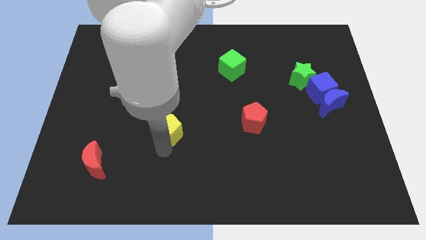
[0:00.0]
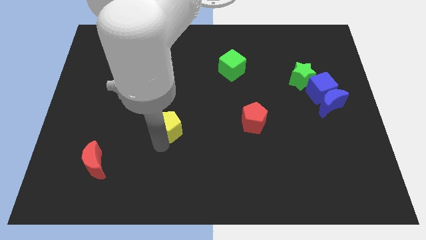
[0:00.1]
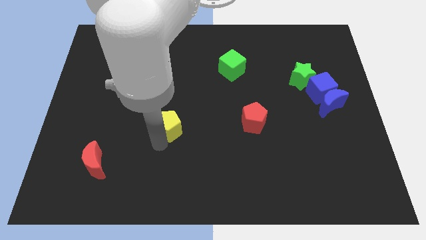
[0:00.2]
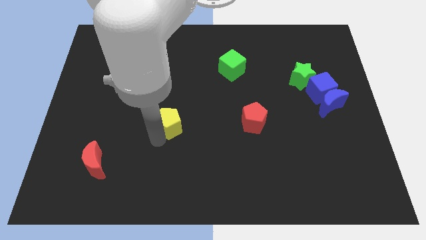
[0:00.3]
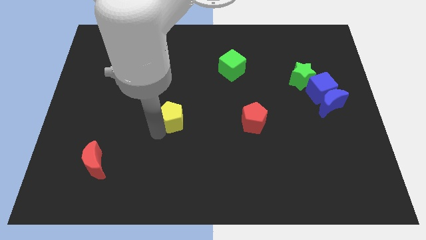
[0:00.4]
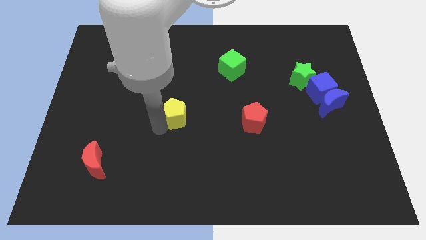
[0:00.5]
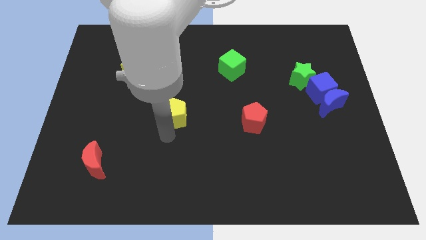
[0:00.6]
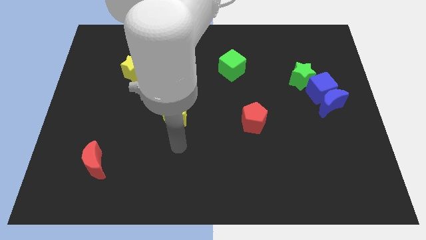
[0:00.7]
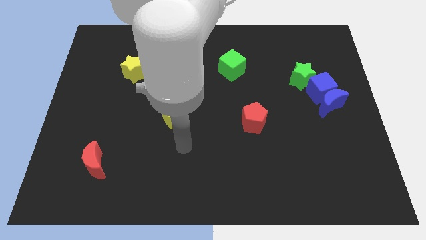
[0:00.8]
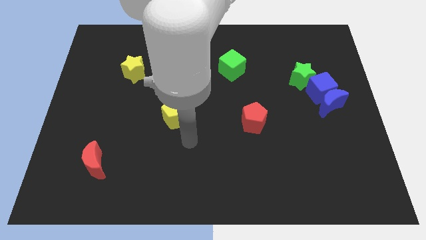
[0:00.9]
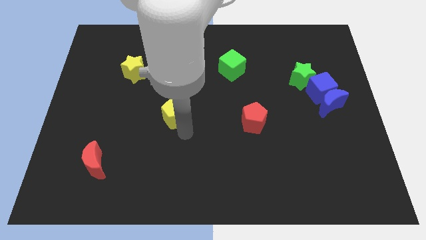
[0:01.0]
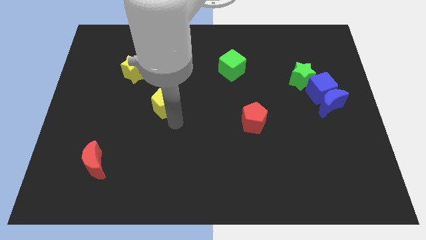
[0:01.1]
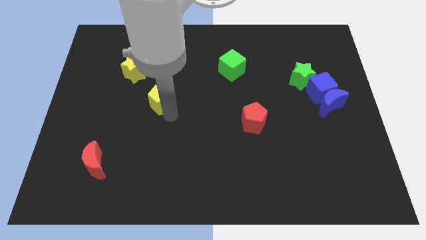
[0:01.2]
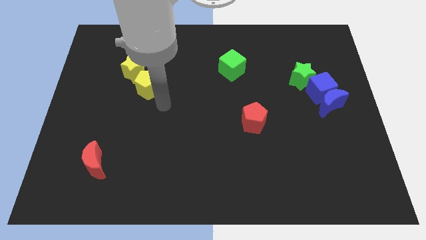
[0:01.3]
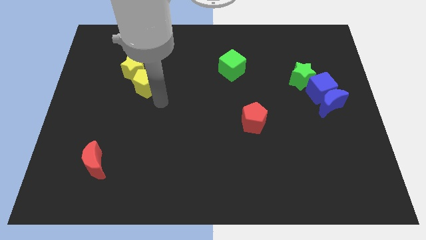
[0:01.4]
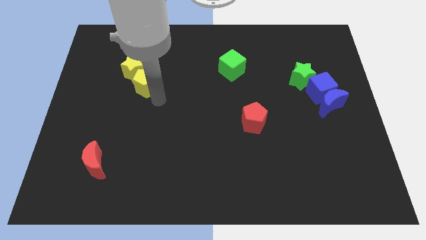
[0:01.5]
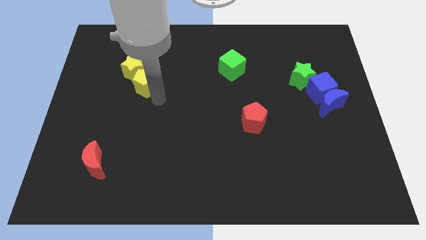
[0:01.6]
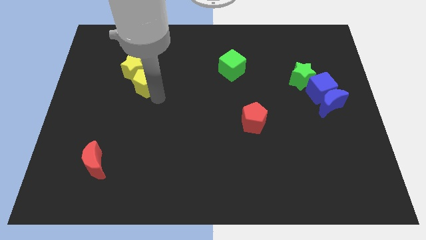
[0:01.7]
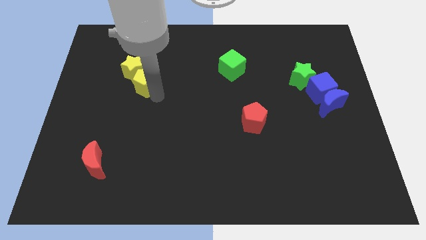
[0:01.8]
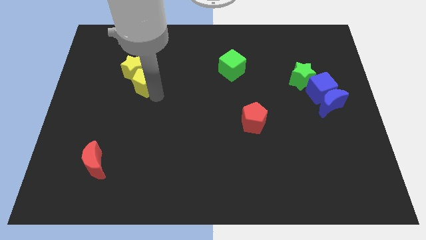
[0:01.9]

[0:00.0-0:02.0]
push the yellow pentagon to the bottom right side of the yellow star

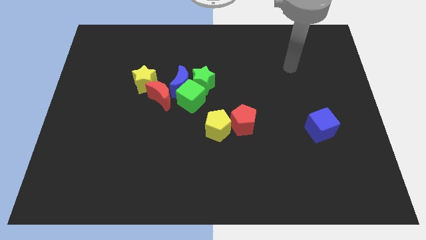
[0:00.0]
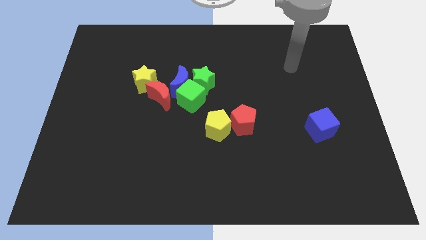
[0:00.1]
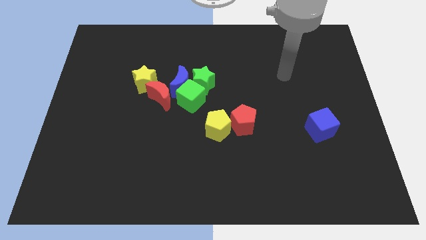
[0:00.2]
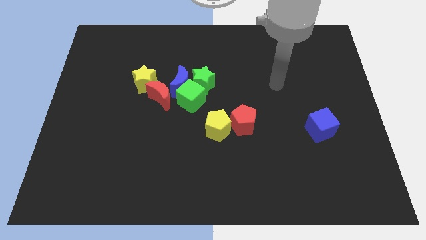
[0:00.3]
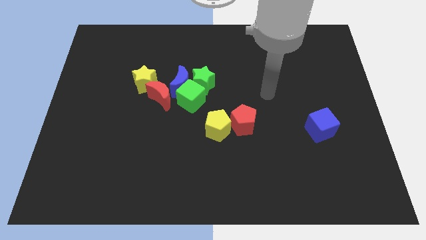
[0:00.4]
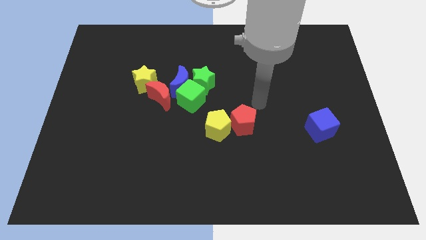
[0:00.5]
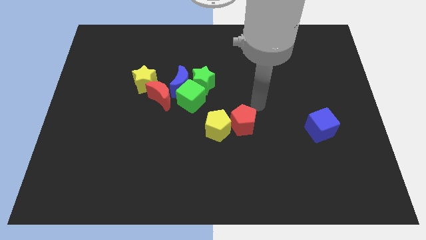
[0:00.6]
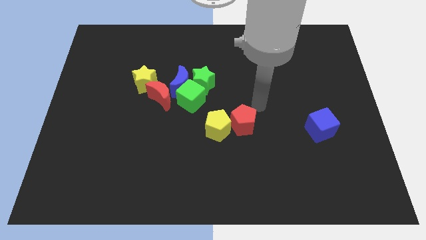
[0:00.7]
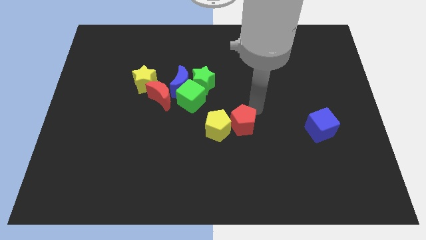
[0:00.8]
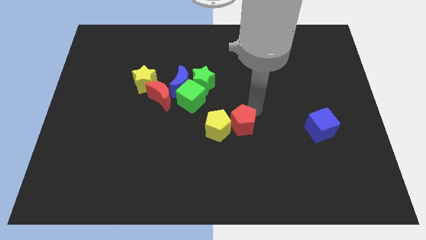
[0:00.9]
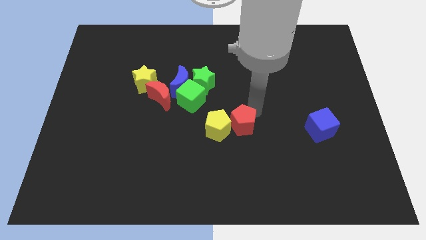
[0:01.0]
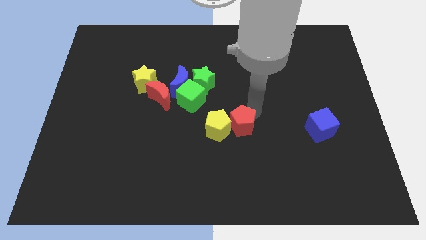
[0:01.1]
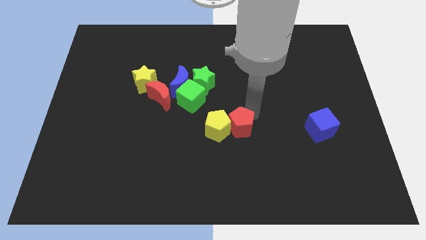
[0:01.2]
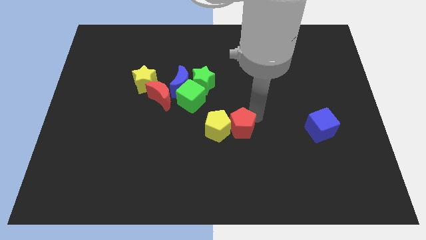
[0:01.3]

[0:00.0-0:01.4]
push the red pentagon into the yellow pentagon

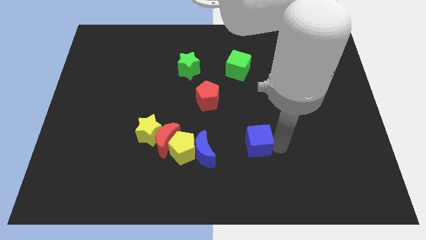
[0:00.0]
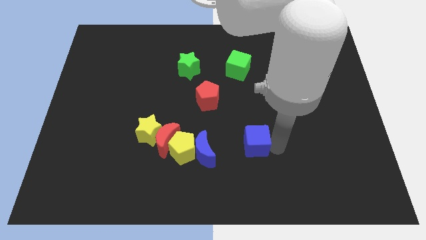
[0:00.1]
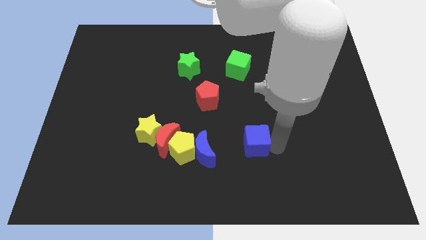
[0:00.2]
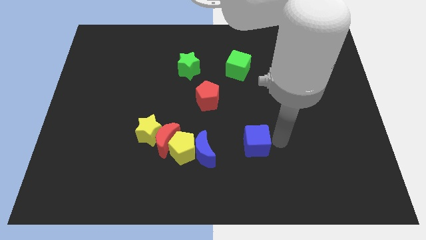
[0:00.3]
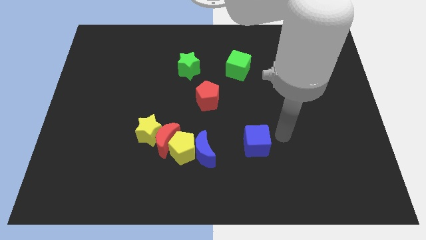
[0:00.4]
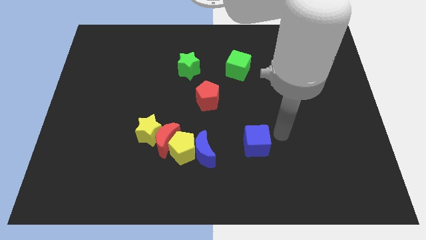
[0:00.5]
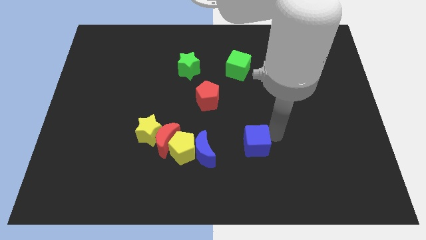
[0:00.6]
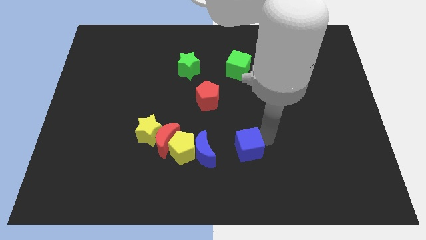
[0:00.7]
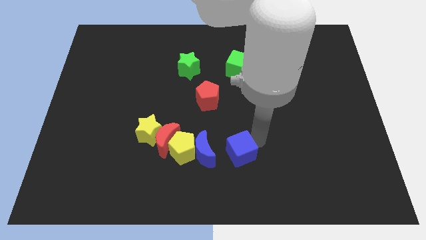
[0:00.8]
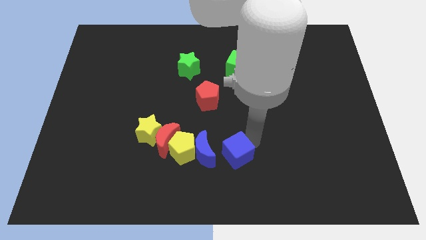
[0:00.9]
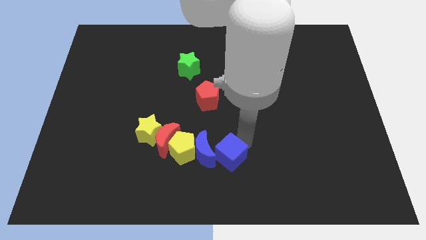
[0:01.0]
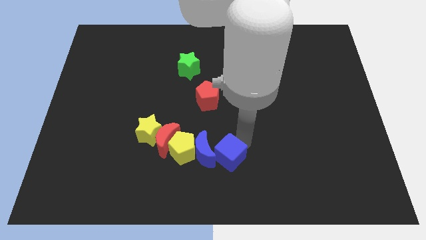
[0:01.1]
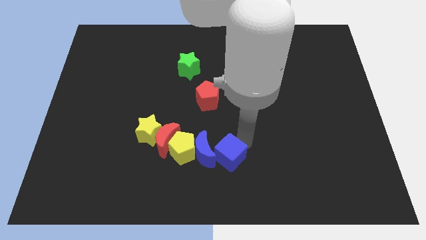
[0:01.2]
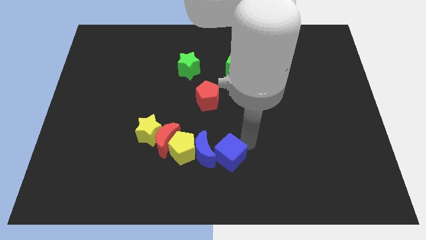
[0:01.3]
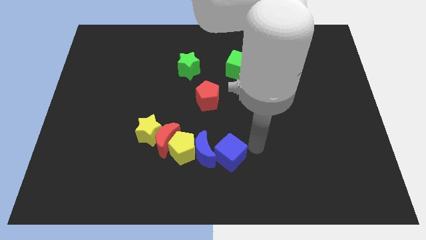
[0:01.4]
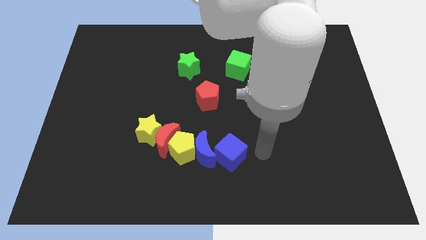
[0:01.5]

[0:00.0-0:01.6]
move the blue cube to the right side of the blue moon

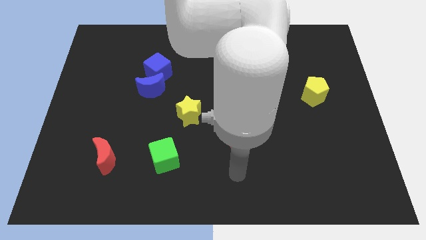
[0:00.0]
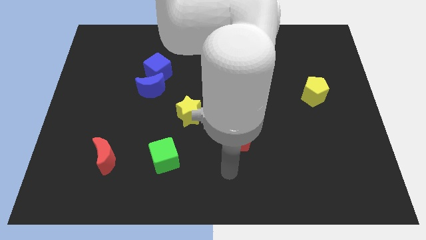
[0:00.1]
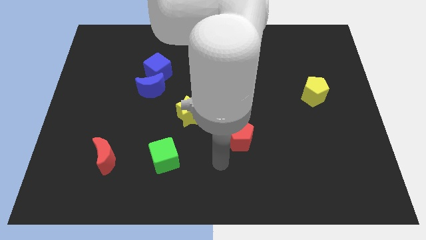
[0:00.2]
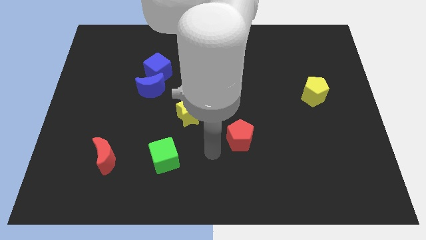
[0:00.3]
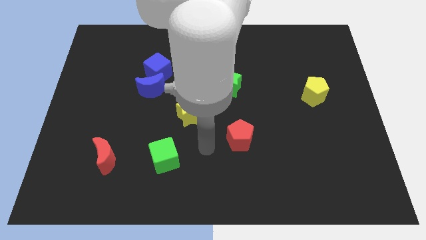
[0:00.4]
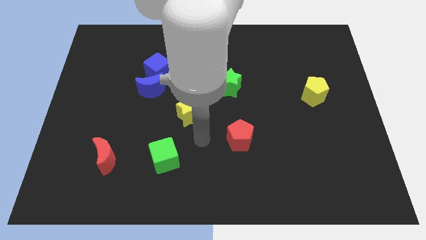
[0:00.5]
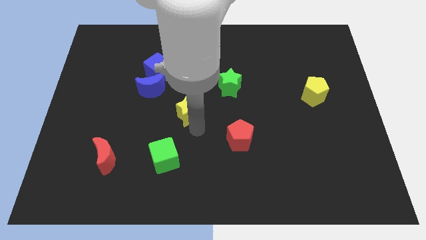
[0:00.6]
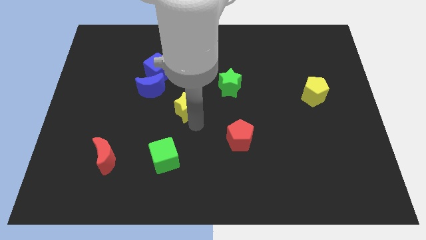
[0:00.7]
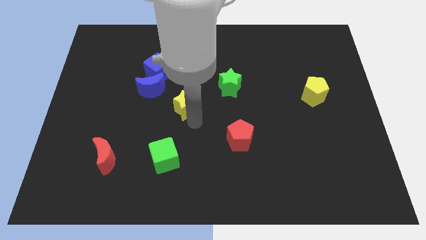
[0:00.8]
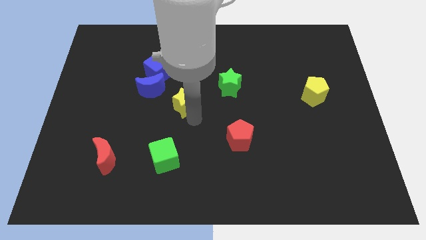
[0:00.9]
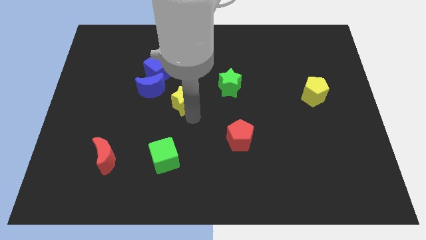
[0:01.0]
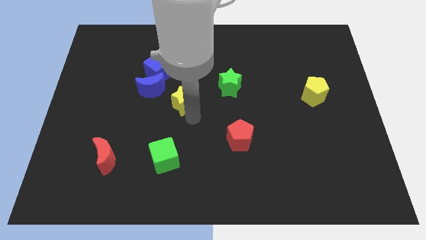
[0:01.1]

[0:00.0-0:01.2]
move the yellow star slightly up

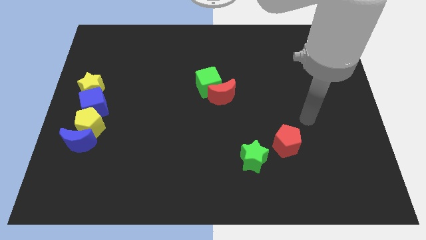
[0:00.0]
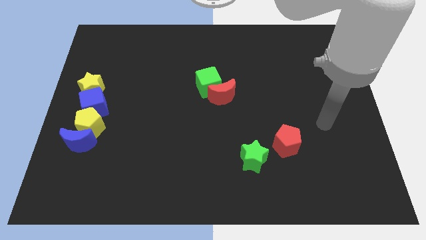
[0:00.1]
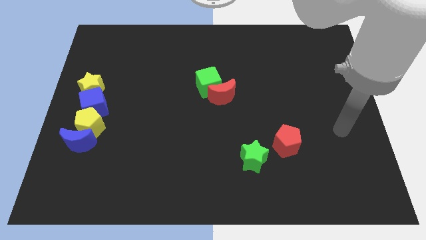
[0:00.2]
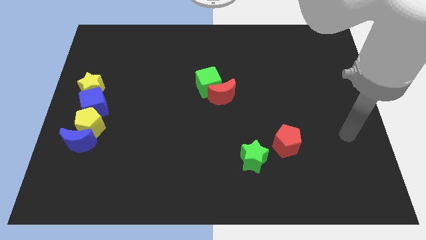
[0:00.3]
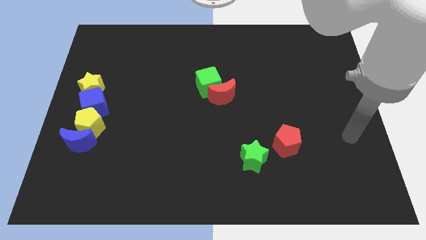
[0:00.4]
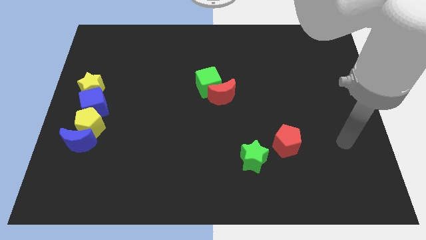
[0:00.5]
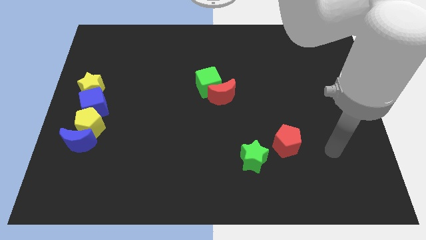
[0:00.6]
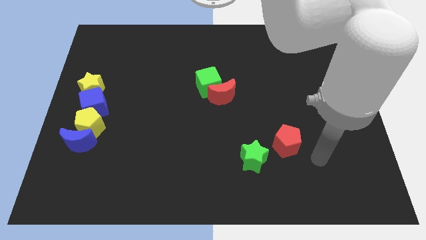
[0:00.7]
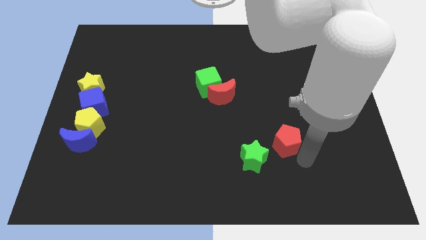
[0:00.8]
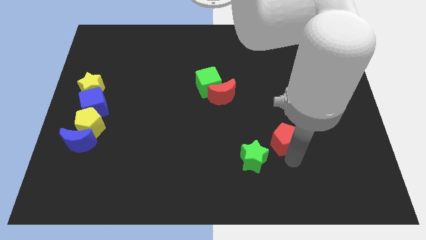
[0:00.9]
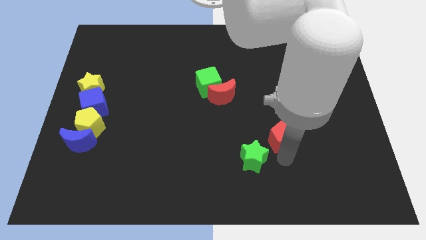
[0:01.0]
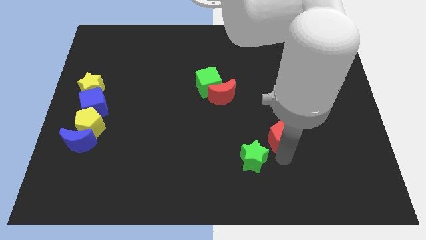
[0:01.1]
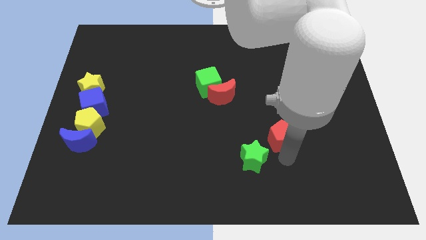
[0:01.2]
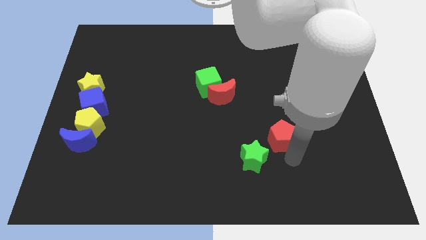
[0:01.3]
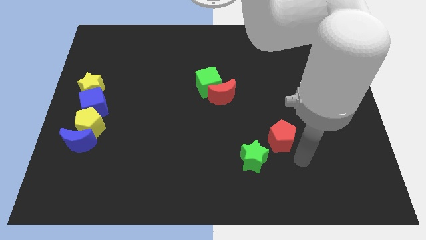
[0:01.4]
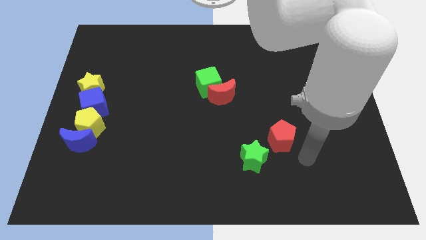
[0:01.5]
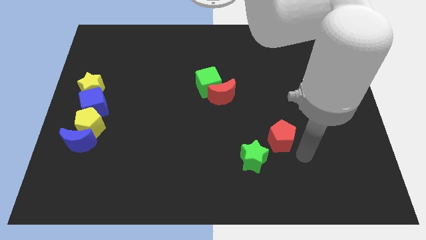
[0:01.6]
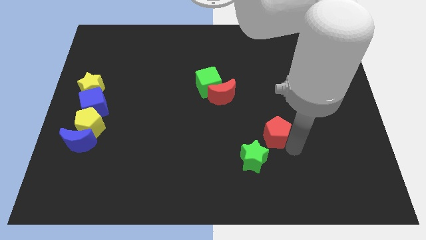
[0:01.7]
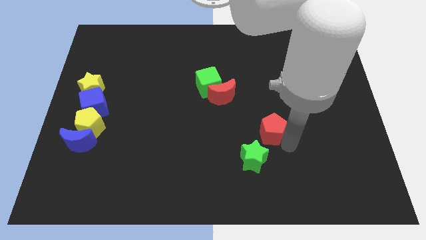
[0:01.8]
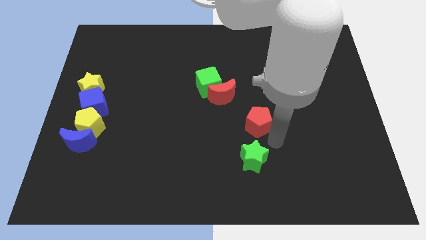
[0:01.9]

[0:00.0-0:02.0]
drag the red pentagon to the top right side of the green star

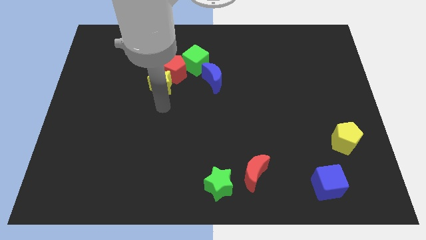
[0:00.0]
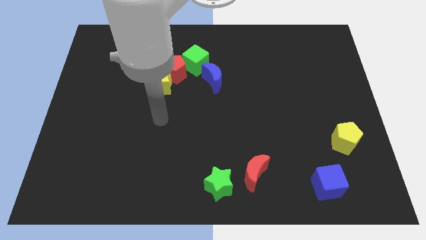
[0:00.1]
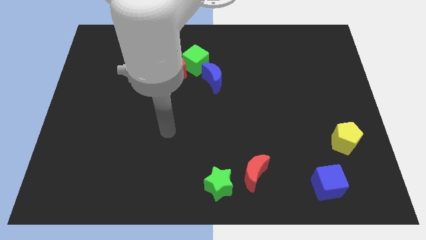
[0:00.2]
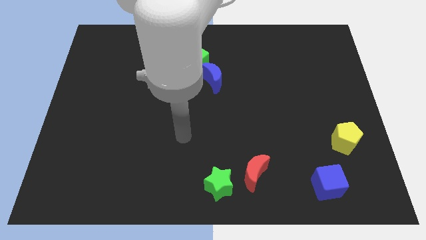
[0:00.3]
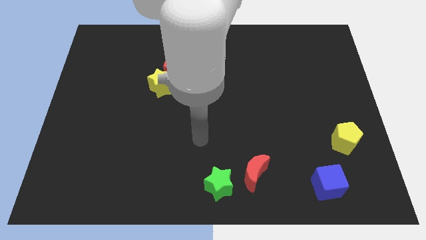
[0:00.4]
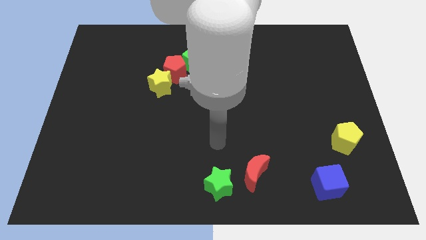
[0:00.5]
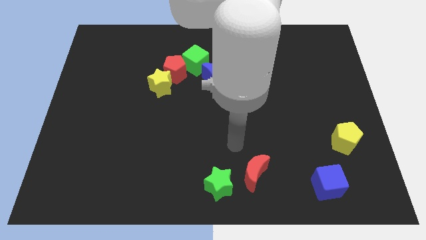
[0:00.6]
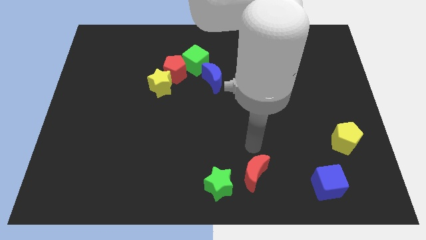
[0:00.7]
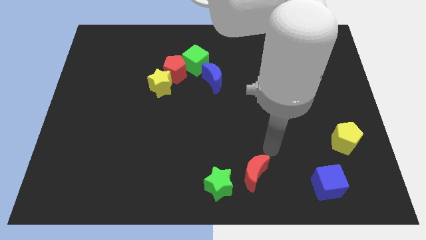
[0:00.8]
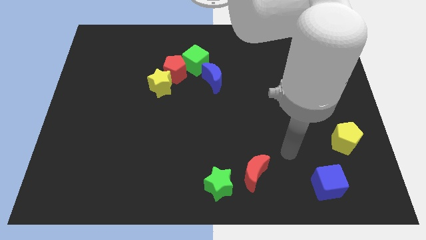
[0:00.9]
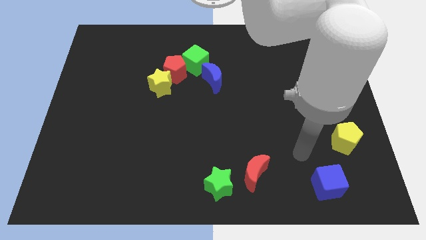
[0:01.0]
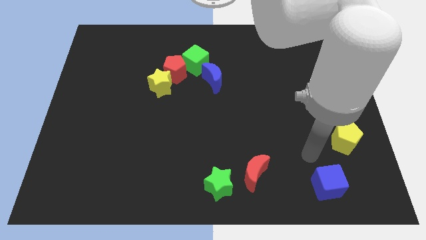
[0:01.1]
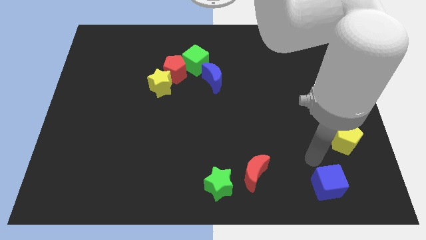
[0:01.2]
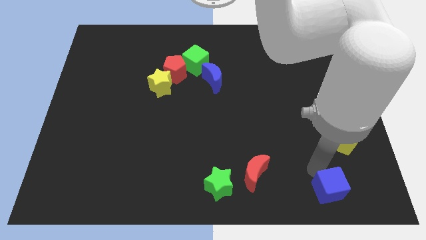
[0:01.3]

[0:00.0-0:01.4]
move your arm away from the yellow star
